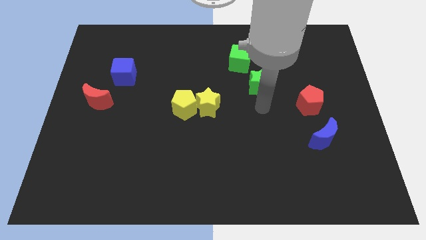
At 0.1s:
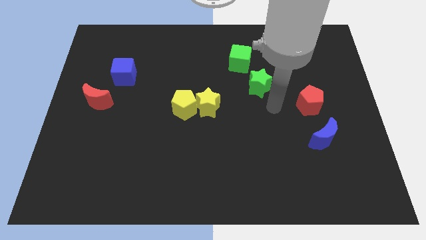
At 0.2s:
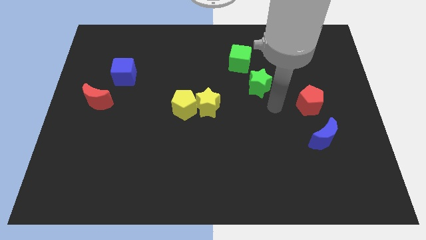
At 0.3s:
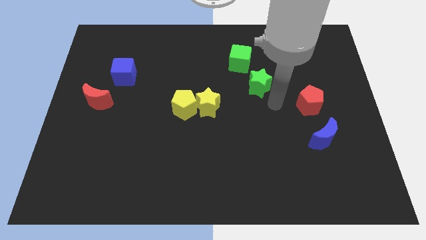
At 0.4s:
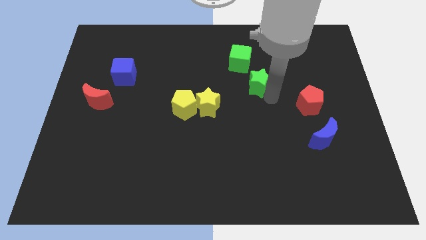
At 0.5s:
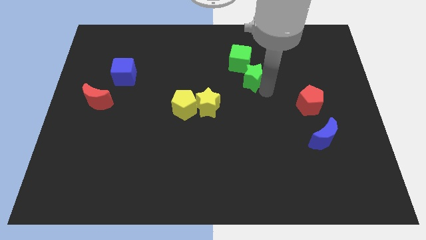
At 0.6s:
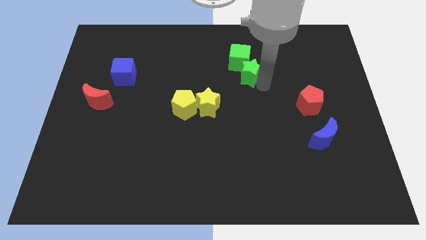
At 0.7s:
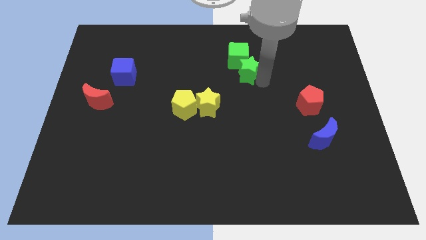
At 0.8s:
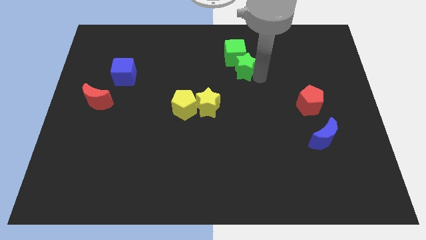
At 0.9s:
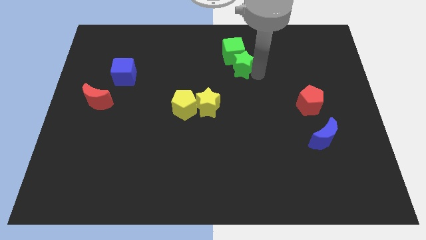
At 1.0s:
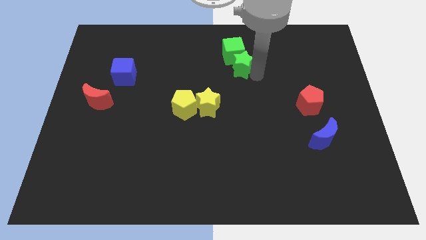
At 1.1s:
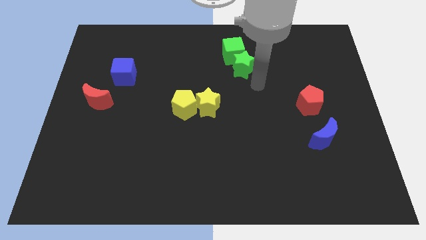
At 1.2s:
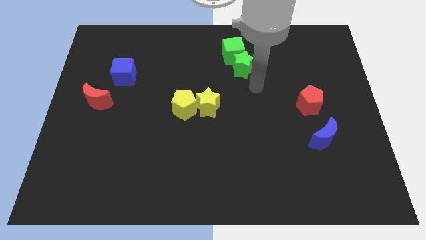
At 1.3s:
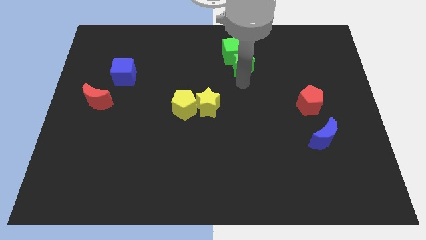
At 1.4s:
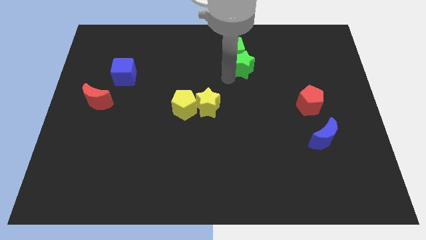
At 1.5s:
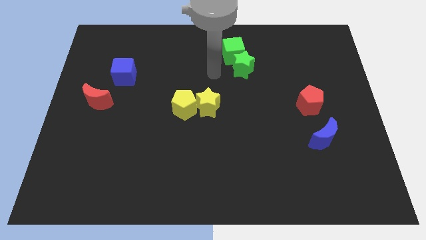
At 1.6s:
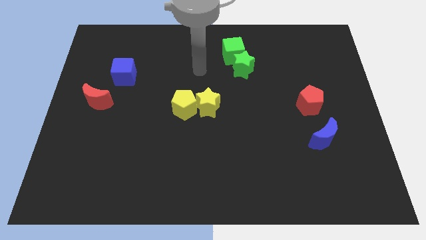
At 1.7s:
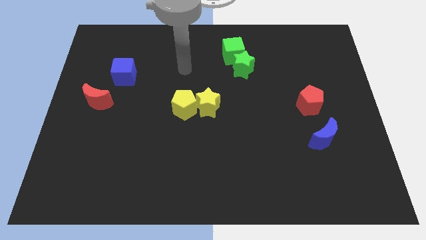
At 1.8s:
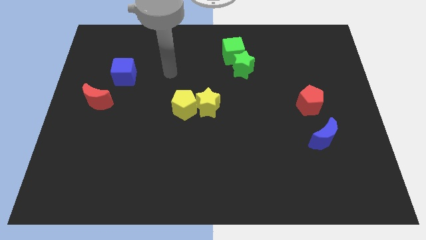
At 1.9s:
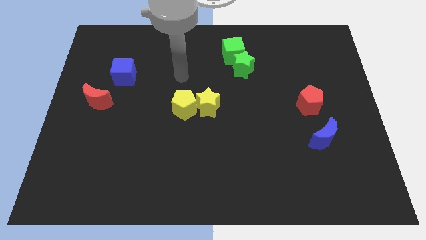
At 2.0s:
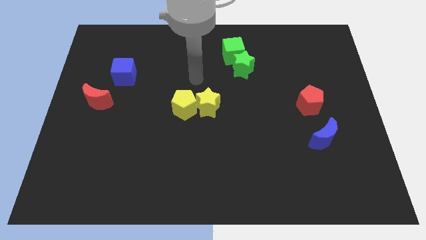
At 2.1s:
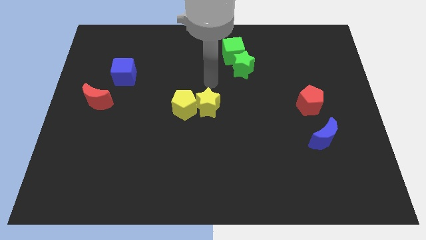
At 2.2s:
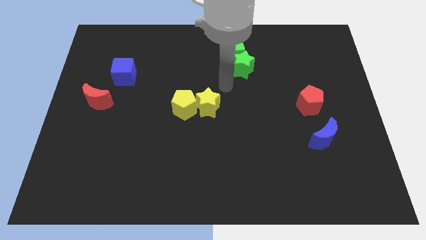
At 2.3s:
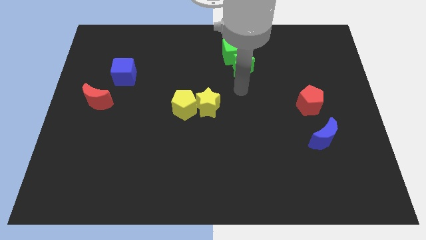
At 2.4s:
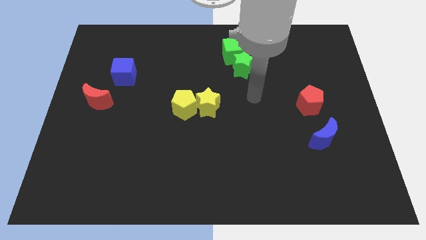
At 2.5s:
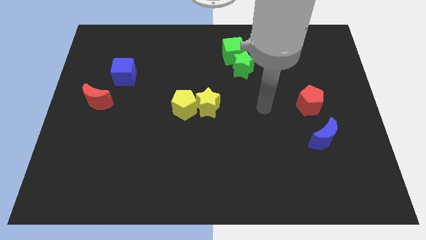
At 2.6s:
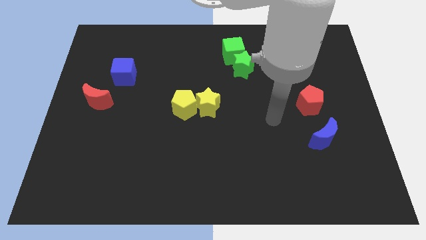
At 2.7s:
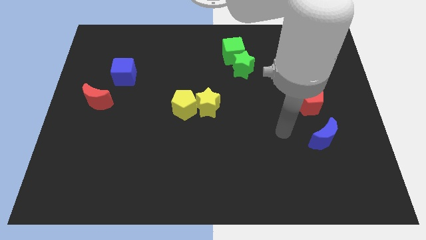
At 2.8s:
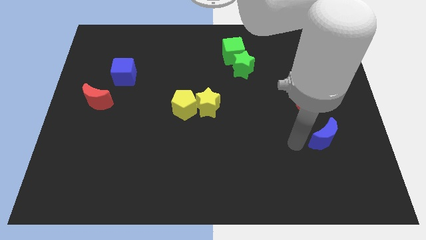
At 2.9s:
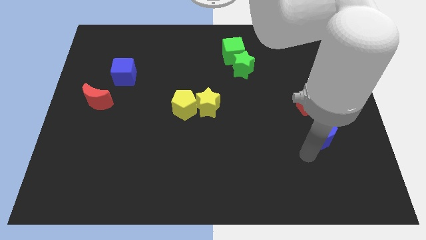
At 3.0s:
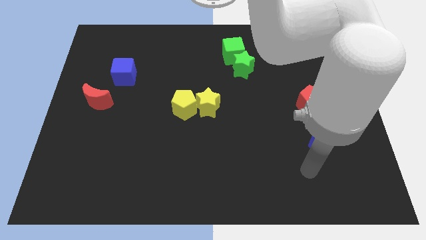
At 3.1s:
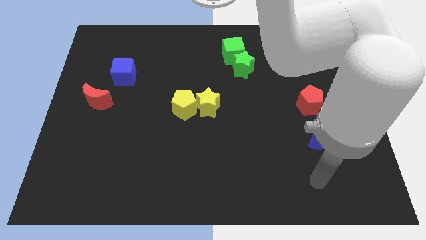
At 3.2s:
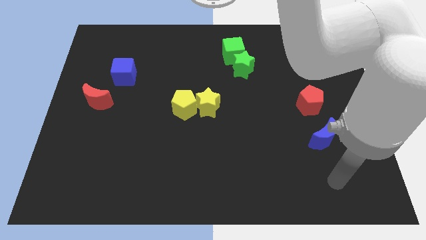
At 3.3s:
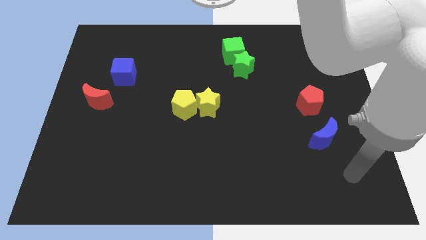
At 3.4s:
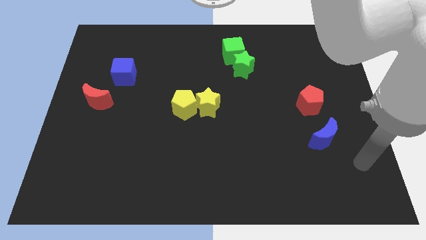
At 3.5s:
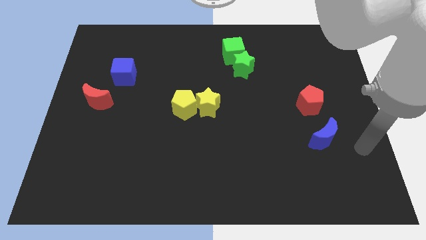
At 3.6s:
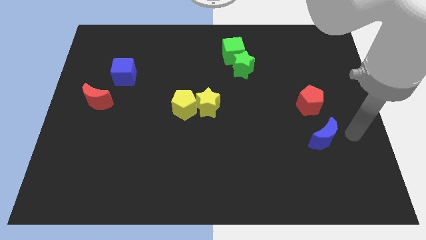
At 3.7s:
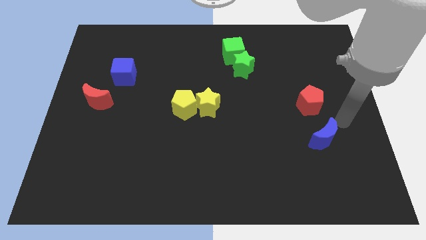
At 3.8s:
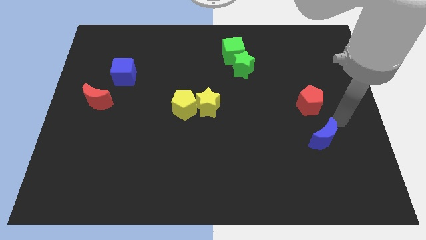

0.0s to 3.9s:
push the green cube to the top center of the board using green star

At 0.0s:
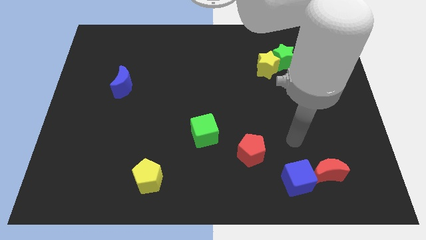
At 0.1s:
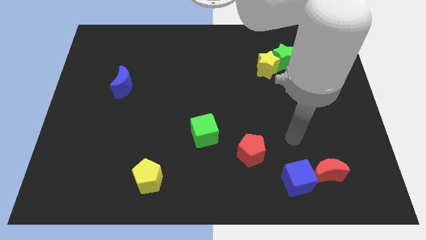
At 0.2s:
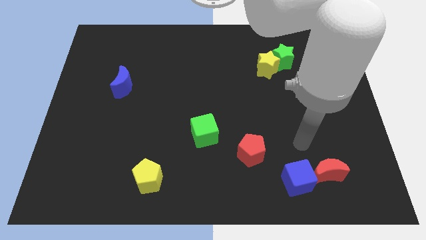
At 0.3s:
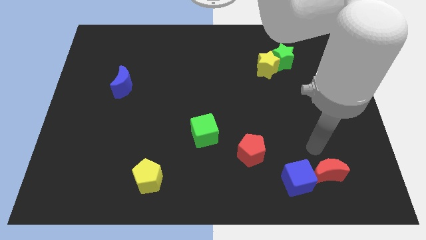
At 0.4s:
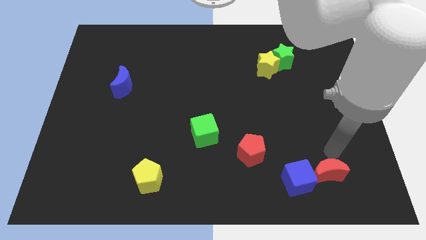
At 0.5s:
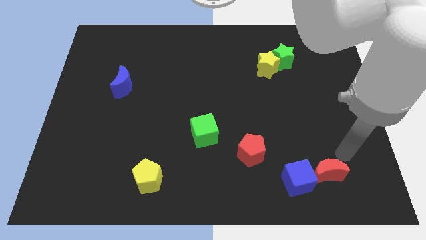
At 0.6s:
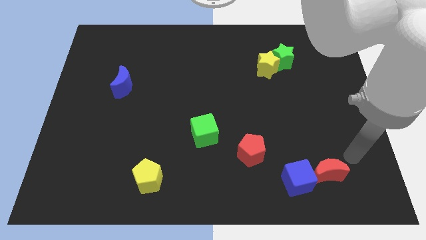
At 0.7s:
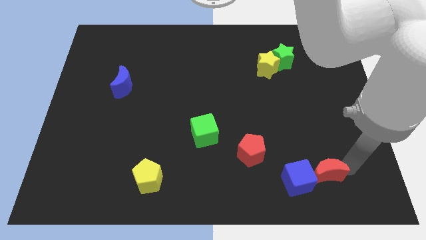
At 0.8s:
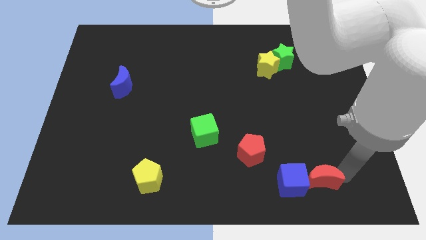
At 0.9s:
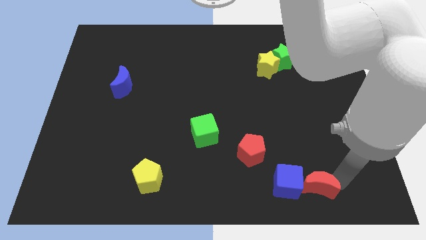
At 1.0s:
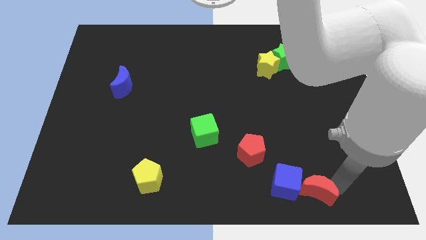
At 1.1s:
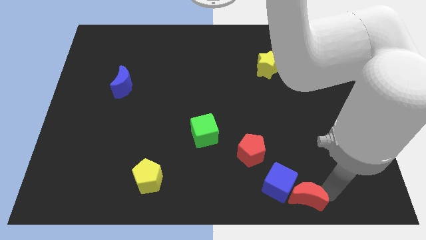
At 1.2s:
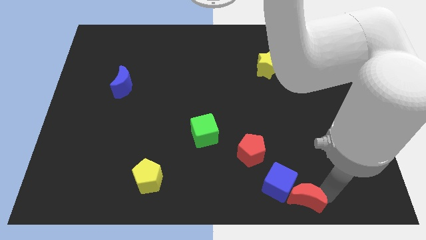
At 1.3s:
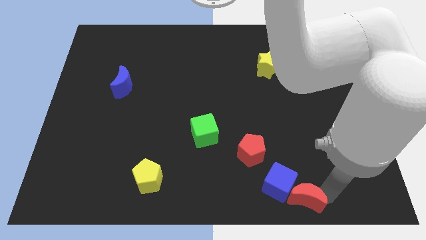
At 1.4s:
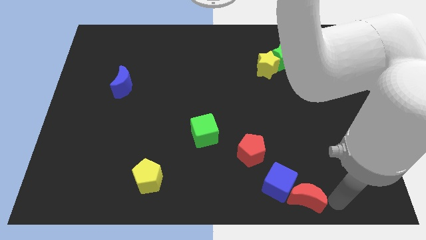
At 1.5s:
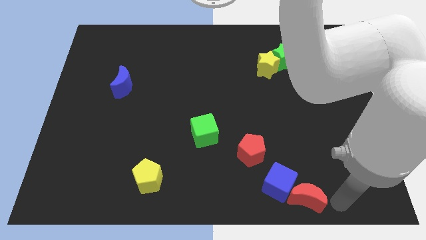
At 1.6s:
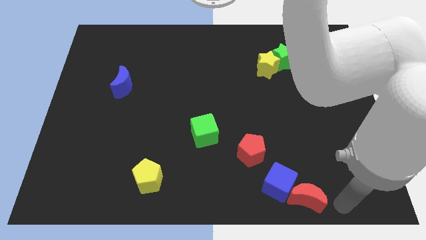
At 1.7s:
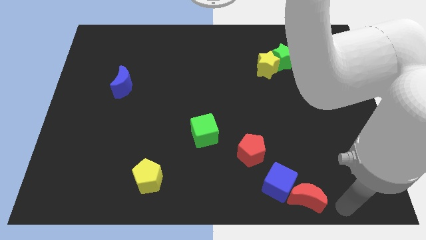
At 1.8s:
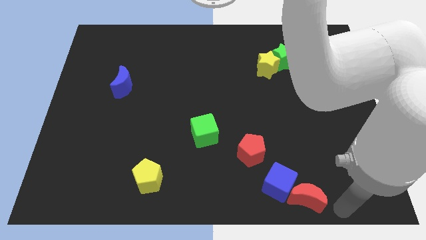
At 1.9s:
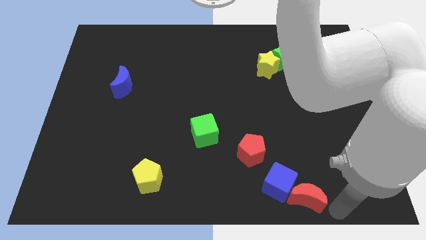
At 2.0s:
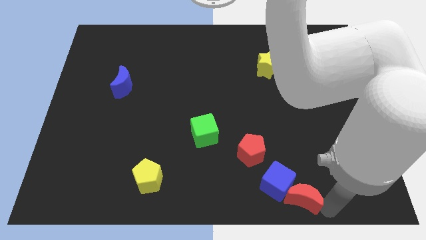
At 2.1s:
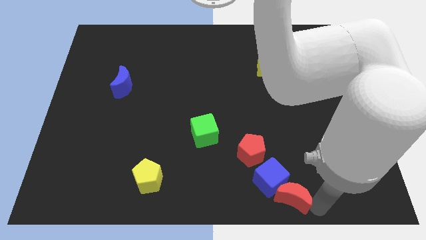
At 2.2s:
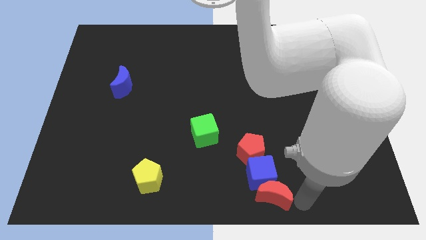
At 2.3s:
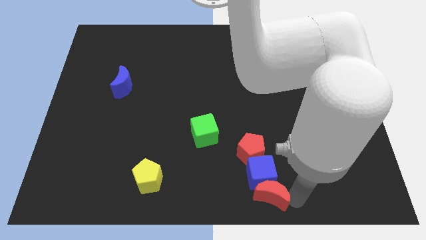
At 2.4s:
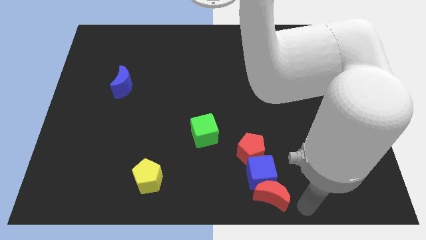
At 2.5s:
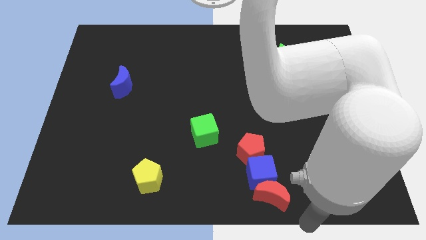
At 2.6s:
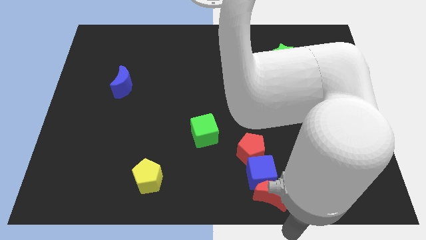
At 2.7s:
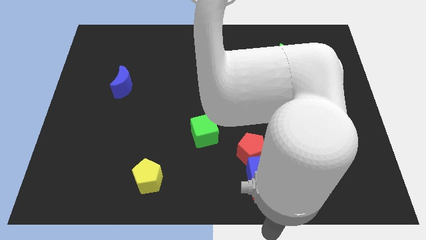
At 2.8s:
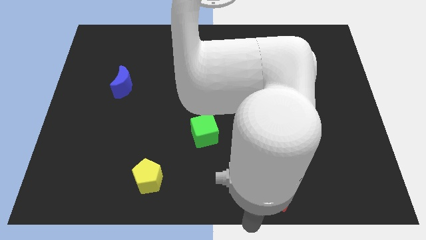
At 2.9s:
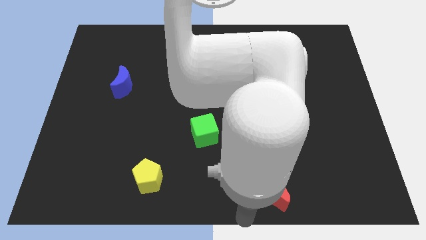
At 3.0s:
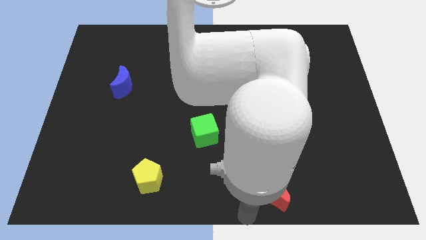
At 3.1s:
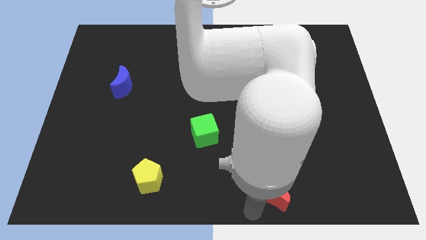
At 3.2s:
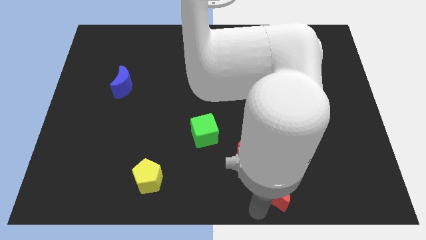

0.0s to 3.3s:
push the red moon into the blue cube

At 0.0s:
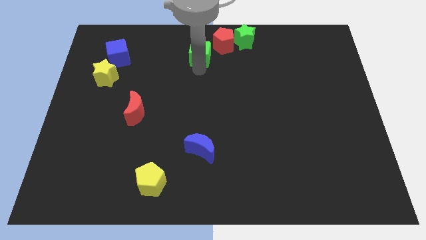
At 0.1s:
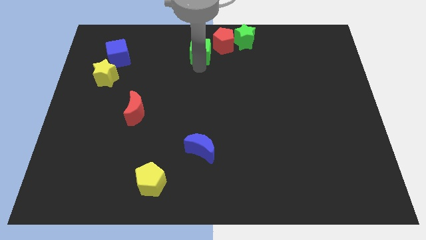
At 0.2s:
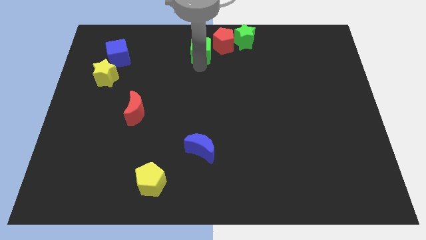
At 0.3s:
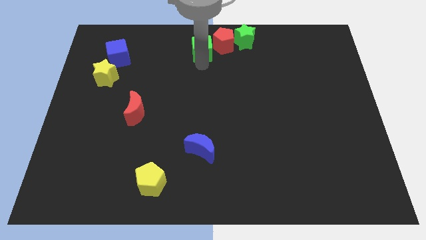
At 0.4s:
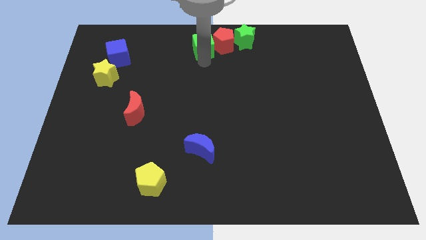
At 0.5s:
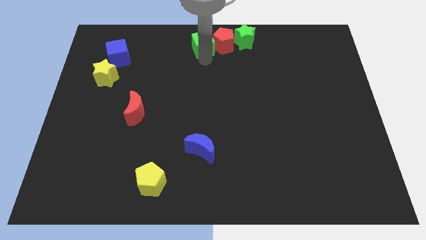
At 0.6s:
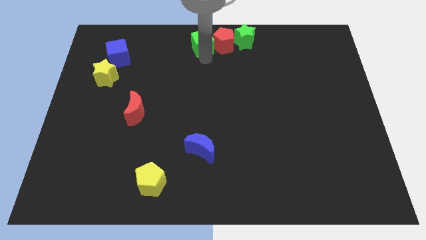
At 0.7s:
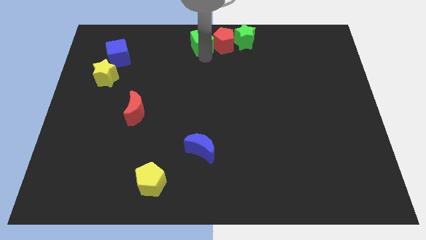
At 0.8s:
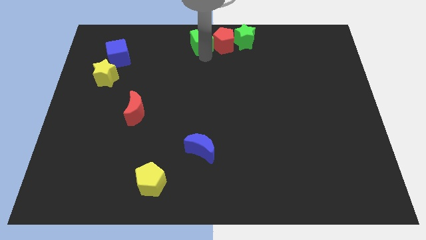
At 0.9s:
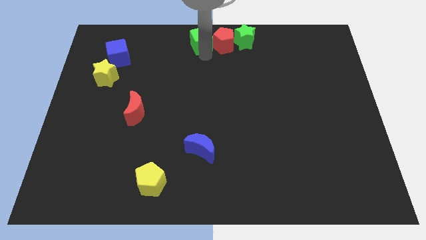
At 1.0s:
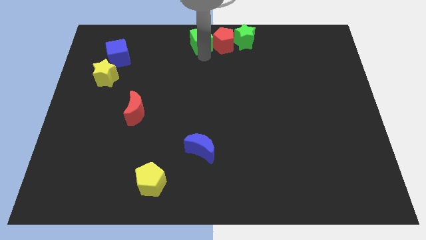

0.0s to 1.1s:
push the green cube into the red pentagon

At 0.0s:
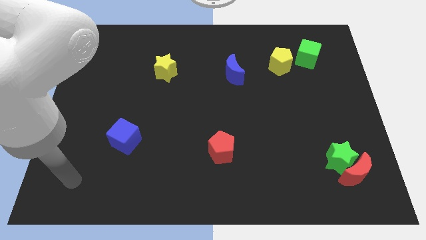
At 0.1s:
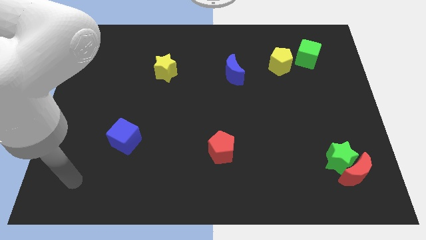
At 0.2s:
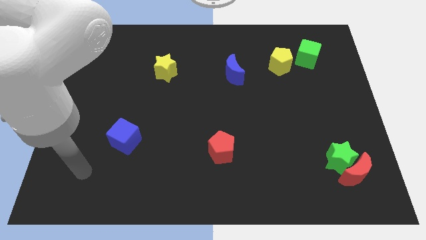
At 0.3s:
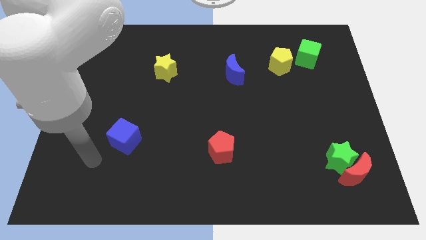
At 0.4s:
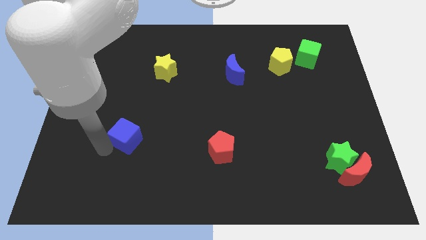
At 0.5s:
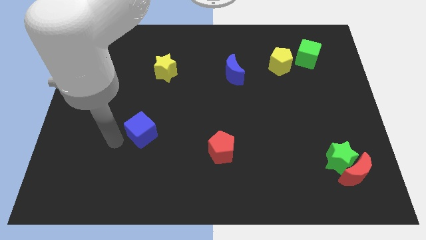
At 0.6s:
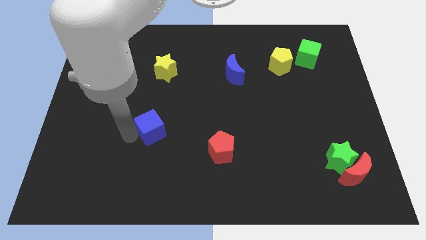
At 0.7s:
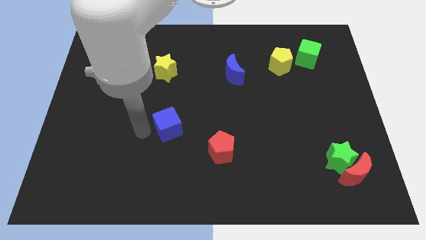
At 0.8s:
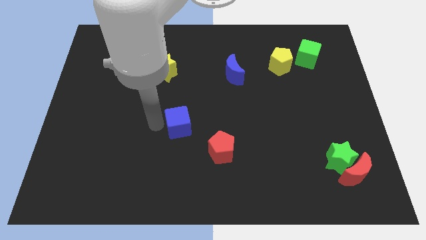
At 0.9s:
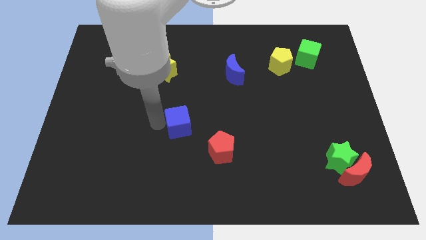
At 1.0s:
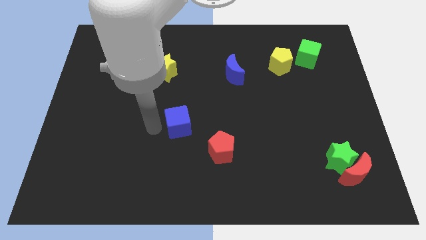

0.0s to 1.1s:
push the blue cube to the top left of the red pentagon
